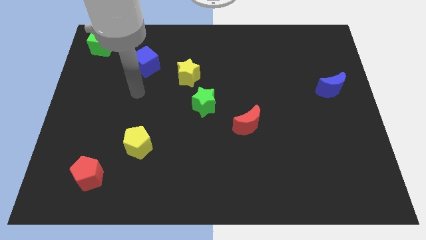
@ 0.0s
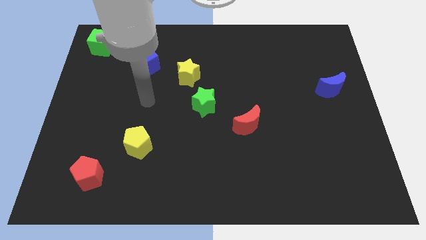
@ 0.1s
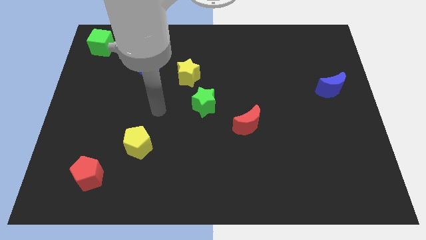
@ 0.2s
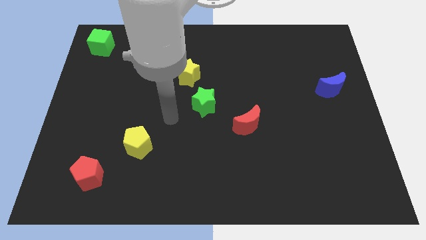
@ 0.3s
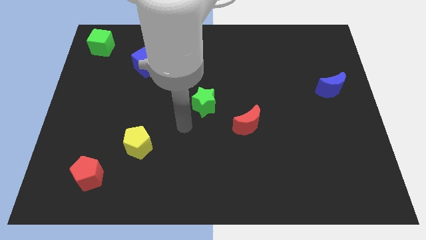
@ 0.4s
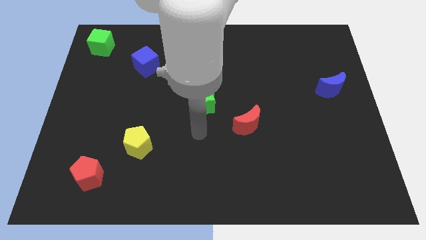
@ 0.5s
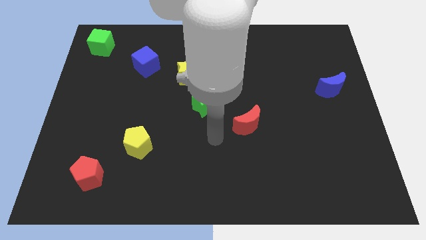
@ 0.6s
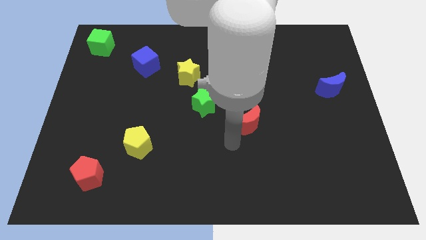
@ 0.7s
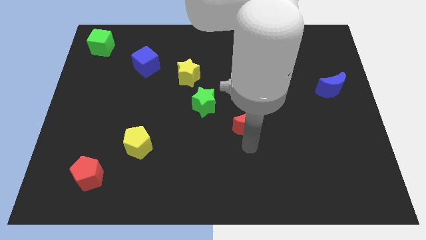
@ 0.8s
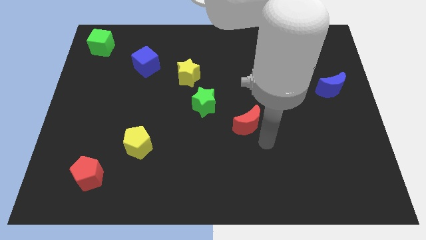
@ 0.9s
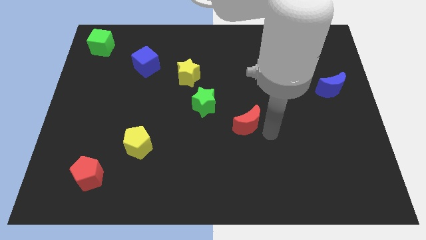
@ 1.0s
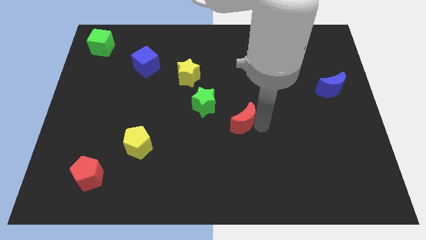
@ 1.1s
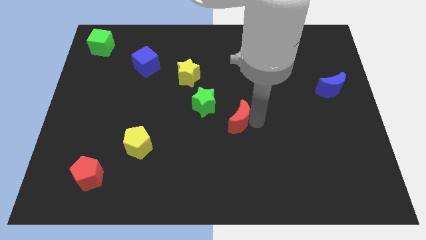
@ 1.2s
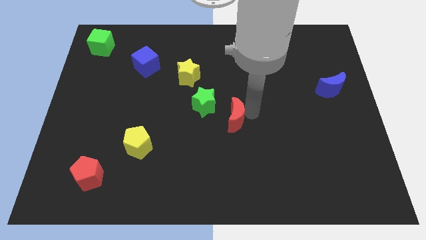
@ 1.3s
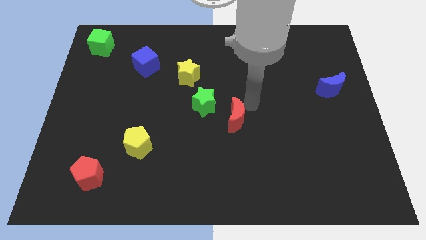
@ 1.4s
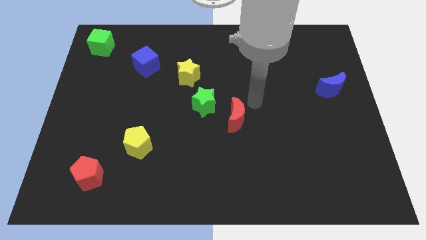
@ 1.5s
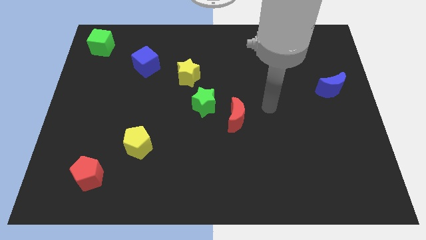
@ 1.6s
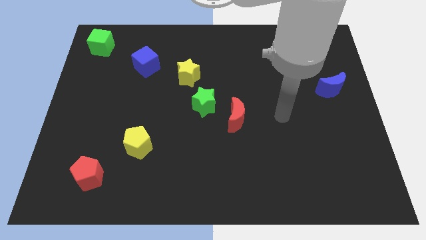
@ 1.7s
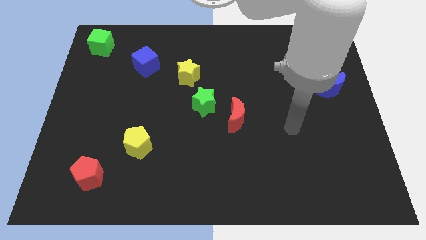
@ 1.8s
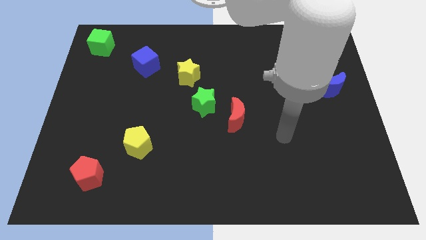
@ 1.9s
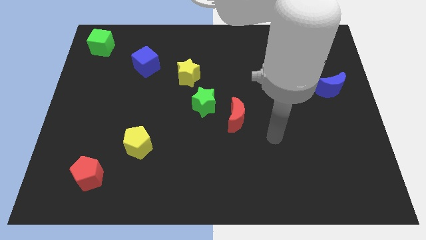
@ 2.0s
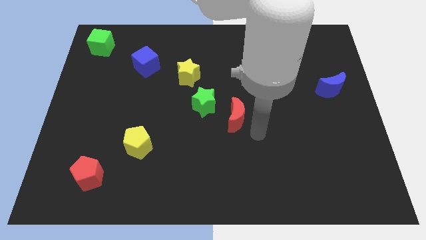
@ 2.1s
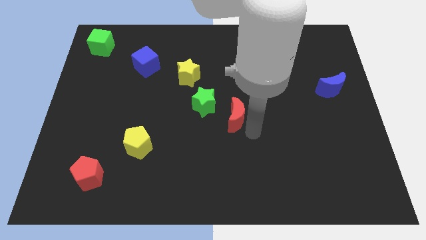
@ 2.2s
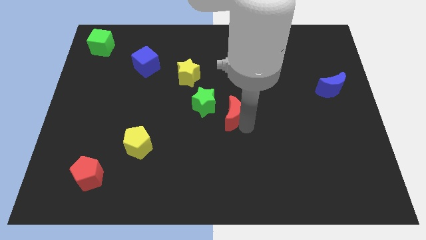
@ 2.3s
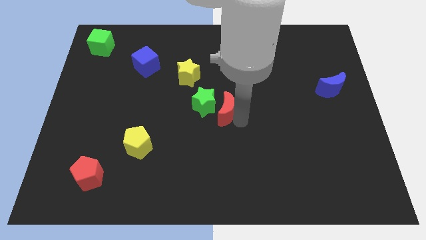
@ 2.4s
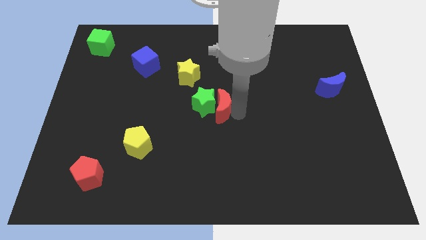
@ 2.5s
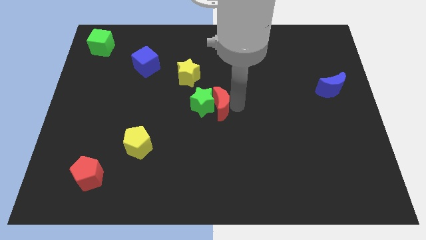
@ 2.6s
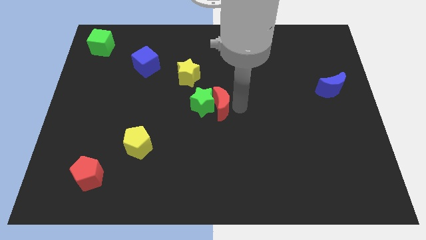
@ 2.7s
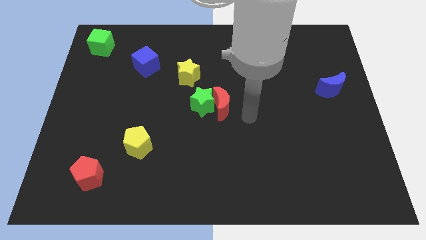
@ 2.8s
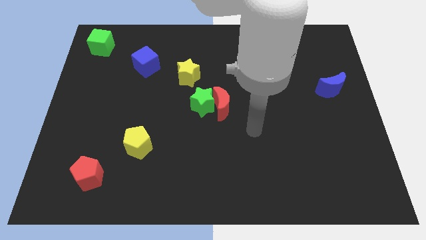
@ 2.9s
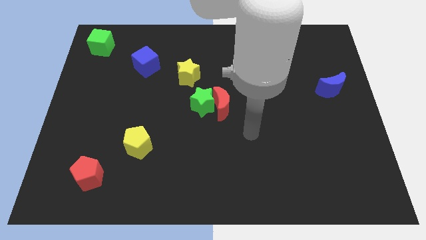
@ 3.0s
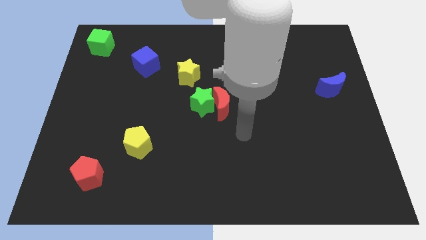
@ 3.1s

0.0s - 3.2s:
push the red moon into the green star

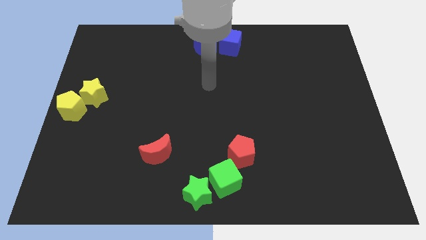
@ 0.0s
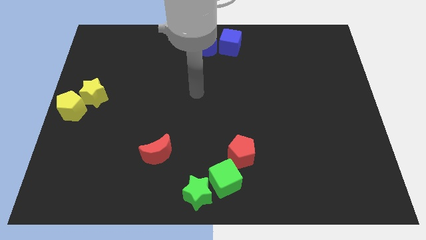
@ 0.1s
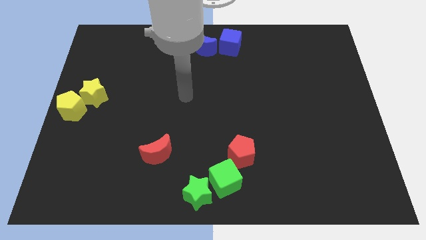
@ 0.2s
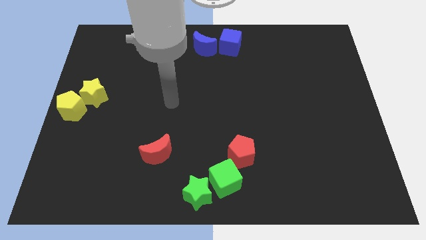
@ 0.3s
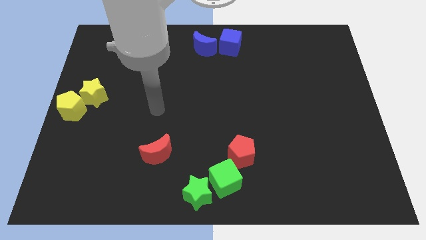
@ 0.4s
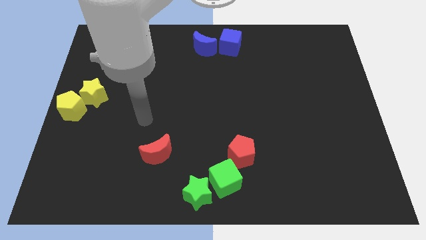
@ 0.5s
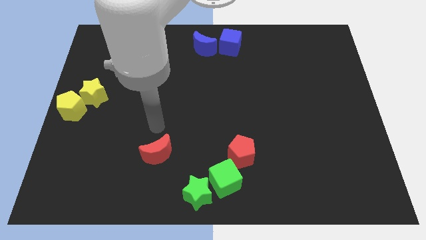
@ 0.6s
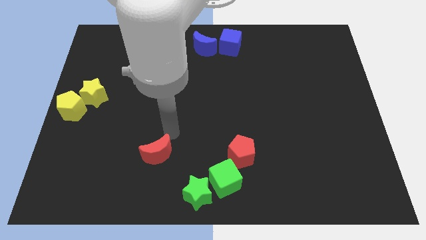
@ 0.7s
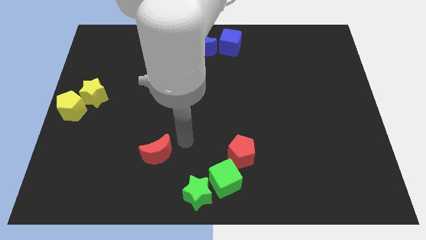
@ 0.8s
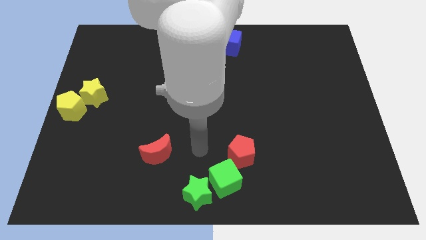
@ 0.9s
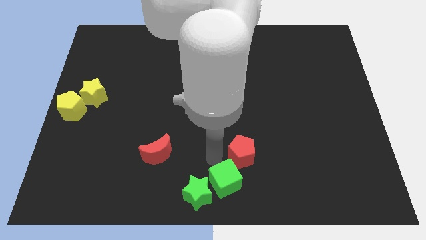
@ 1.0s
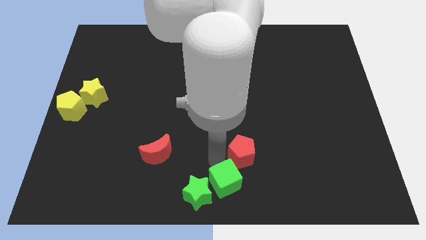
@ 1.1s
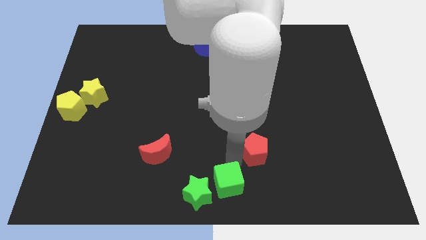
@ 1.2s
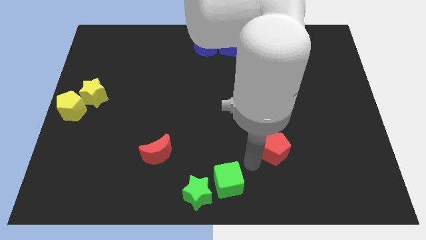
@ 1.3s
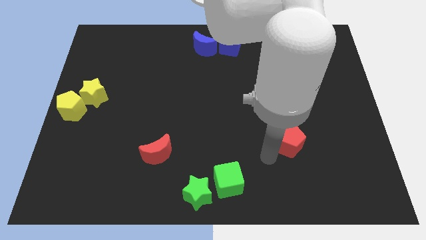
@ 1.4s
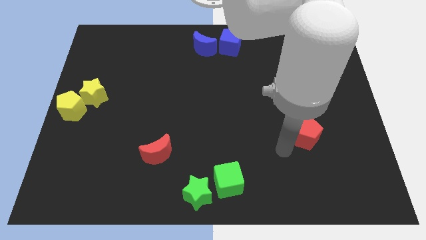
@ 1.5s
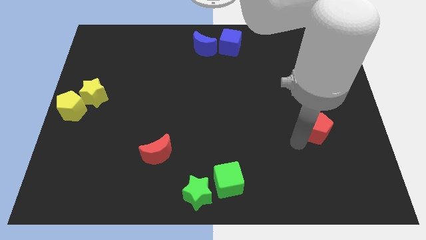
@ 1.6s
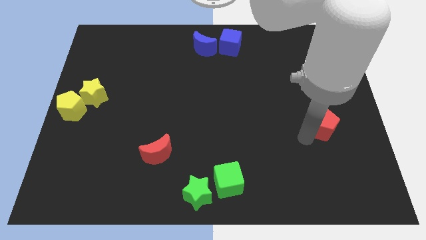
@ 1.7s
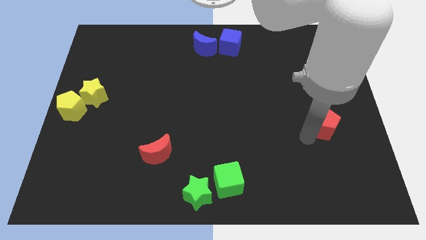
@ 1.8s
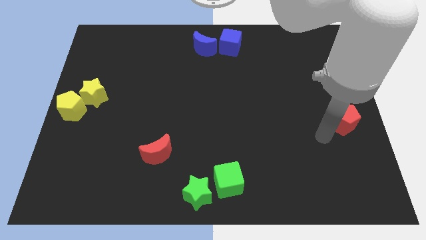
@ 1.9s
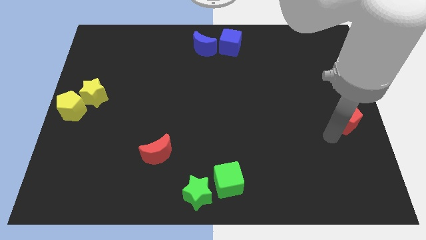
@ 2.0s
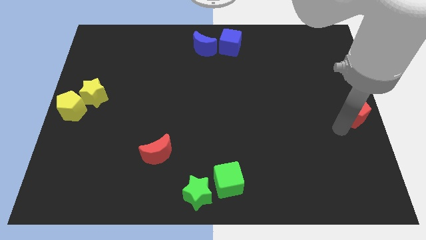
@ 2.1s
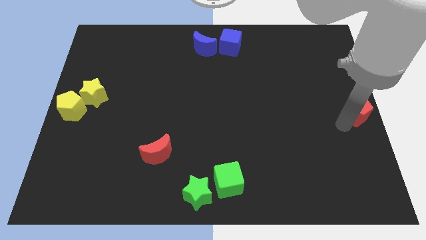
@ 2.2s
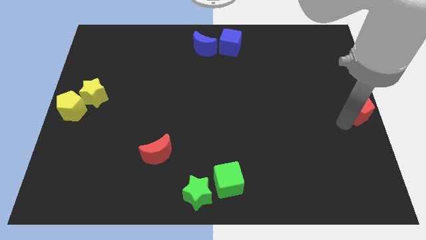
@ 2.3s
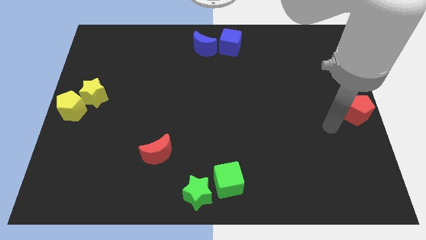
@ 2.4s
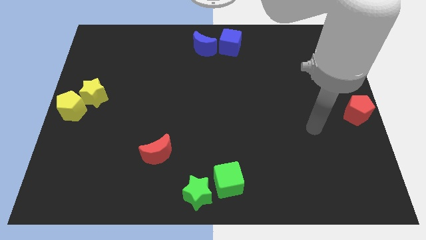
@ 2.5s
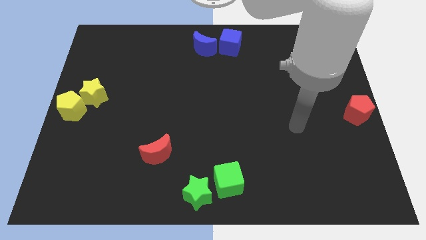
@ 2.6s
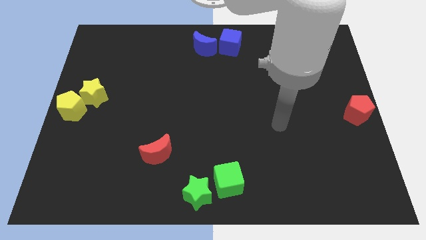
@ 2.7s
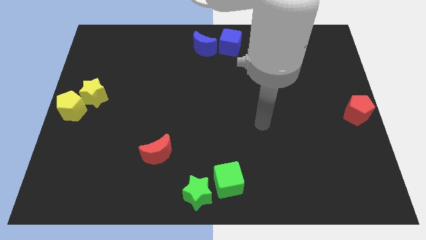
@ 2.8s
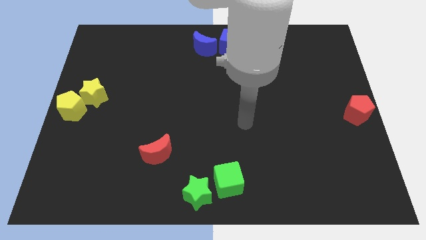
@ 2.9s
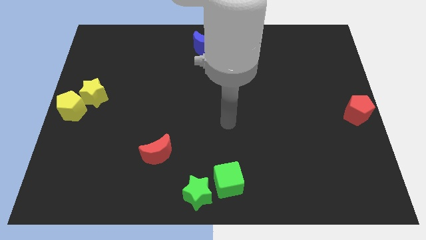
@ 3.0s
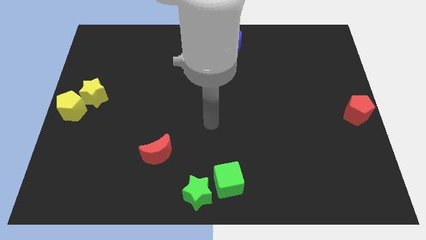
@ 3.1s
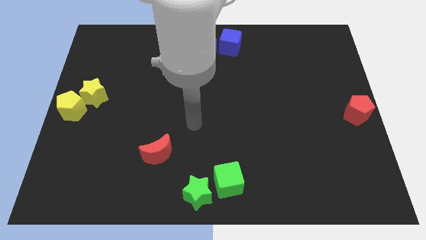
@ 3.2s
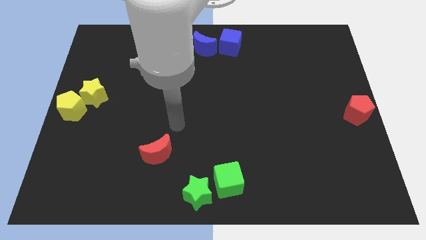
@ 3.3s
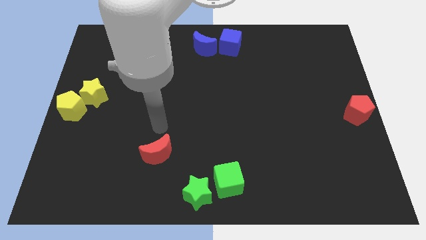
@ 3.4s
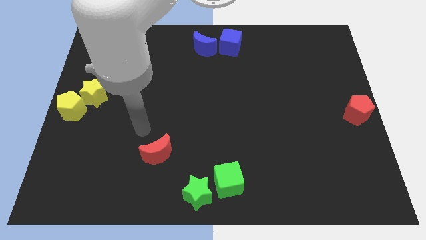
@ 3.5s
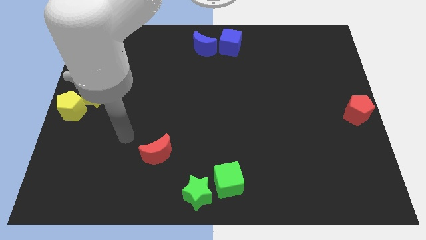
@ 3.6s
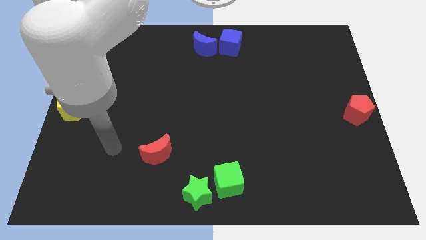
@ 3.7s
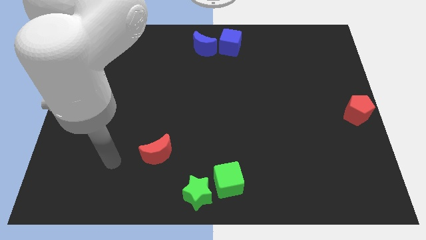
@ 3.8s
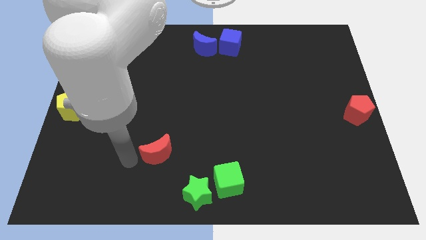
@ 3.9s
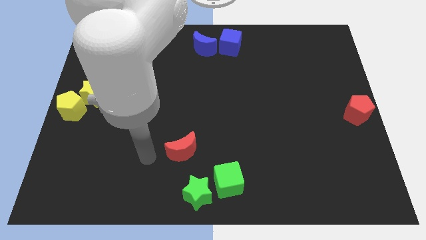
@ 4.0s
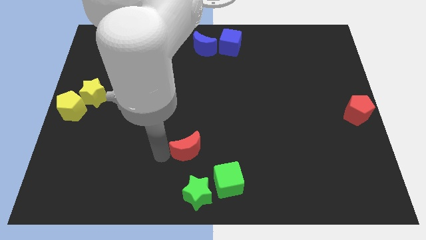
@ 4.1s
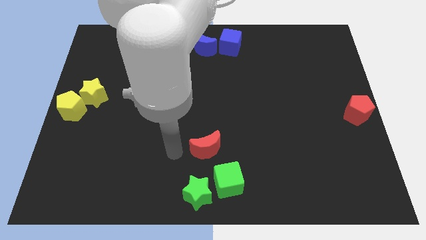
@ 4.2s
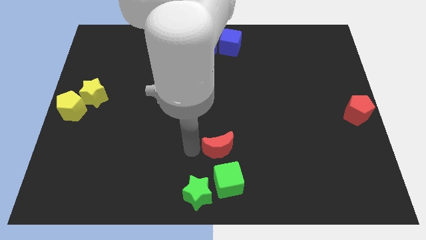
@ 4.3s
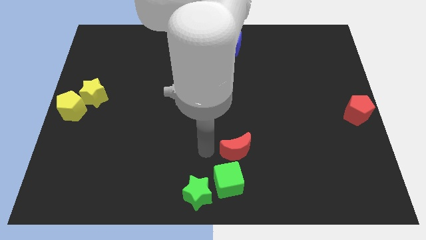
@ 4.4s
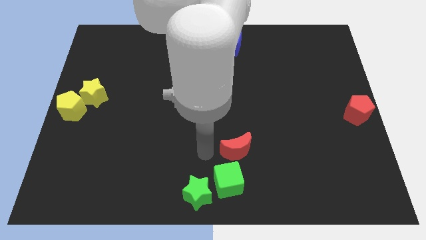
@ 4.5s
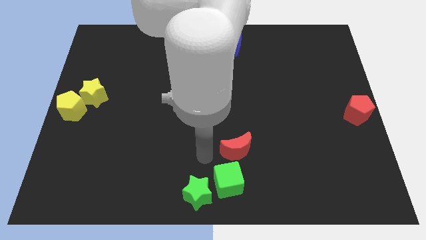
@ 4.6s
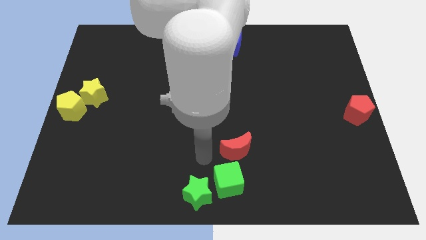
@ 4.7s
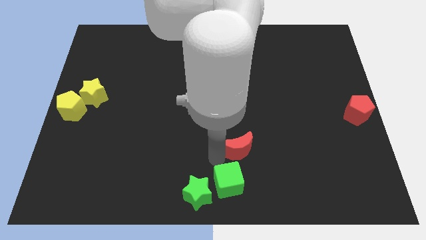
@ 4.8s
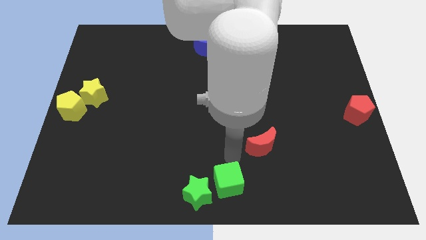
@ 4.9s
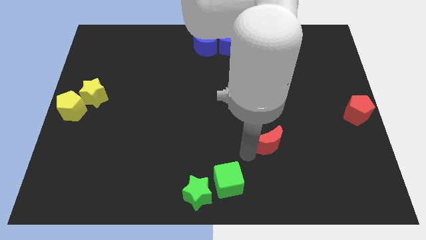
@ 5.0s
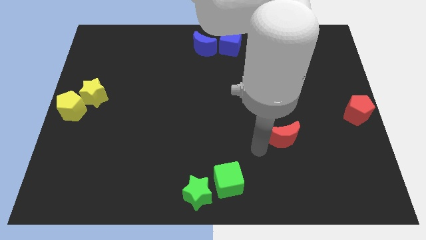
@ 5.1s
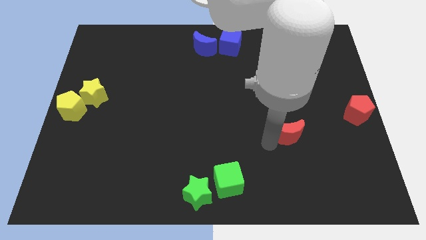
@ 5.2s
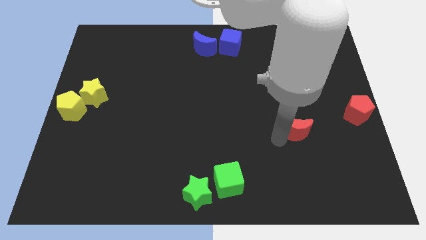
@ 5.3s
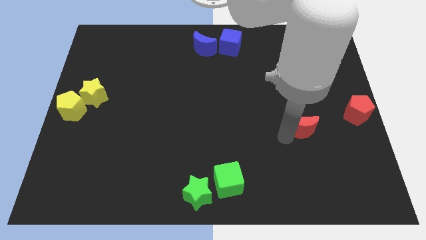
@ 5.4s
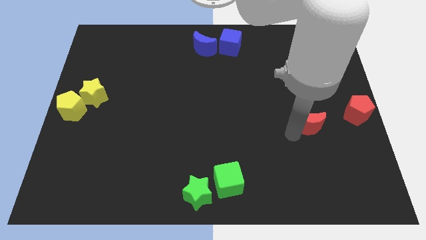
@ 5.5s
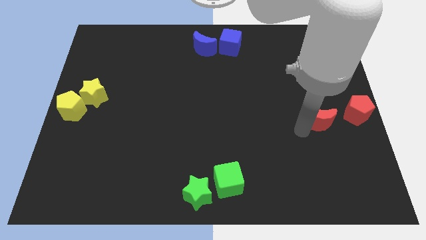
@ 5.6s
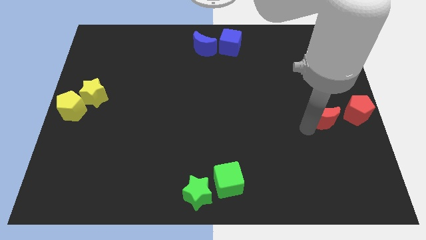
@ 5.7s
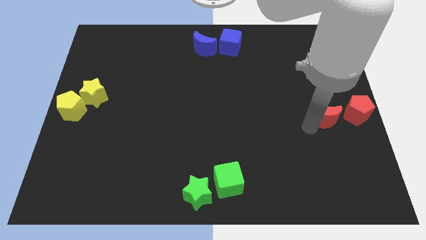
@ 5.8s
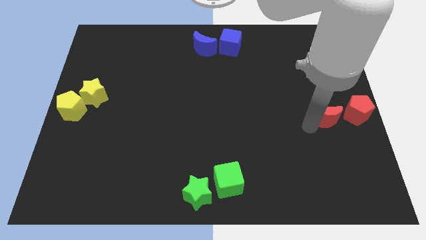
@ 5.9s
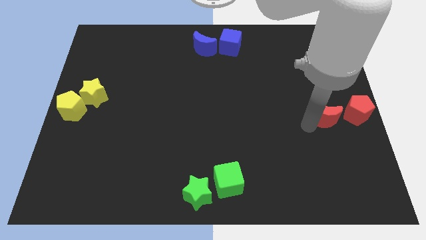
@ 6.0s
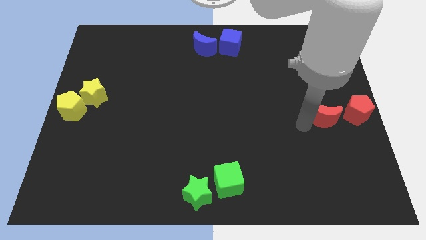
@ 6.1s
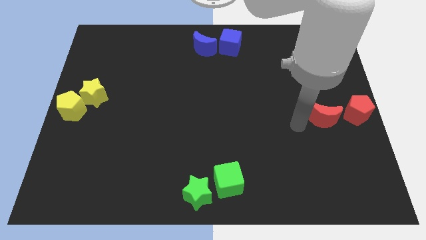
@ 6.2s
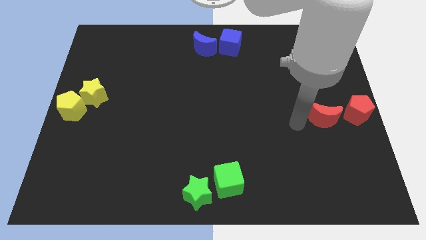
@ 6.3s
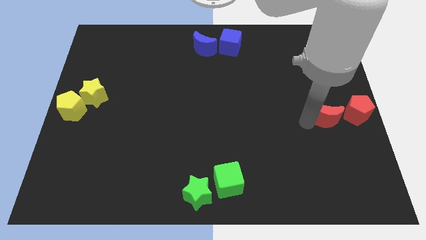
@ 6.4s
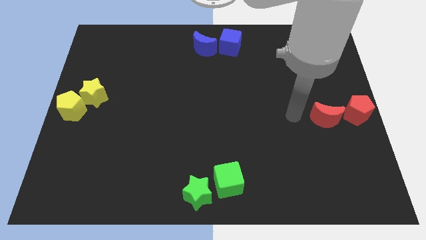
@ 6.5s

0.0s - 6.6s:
put the red blocks at the center right side of the table
